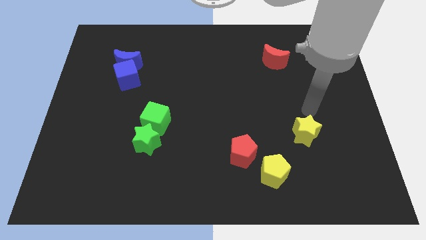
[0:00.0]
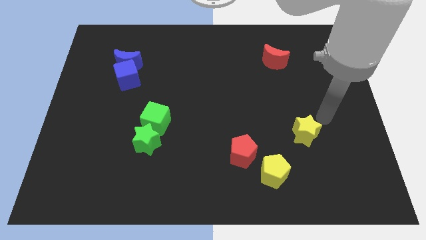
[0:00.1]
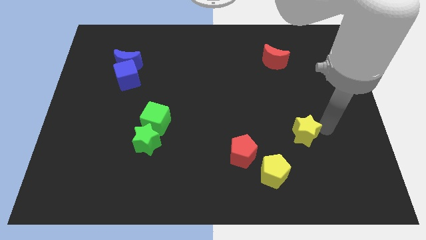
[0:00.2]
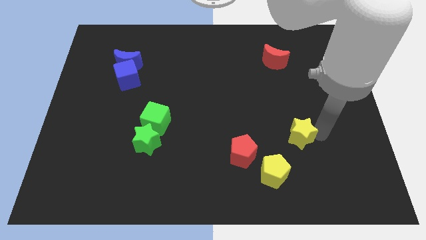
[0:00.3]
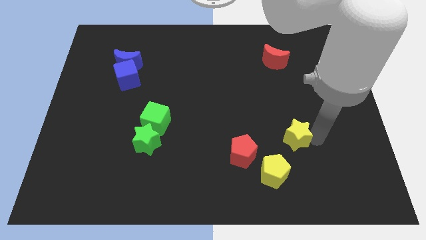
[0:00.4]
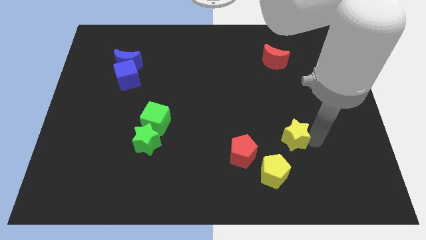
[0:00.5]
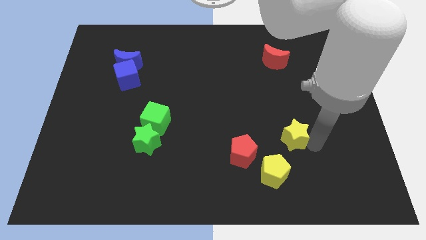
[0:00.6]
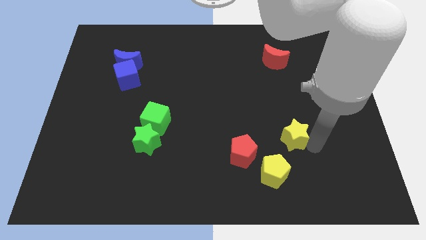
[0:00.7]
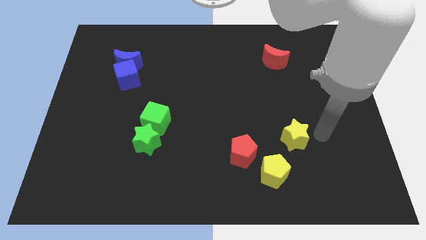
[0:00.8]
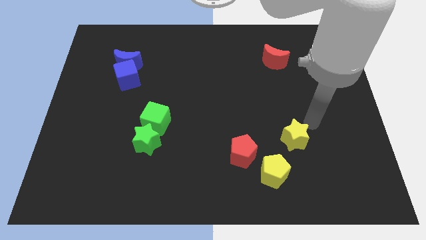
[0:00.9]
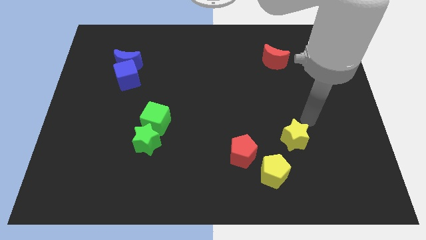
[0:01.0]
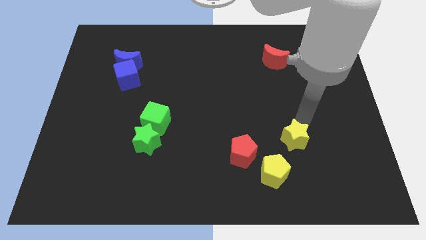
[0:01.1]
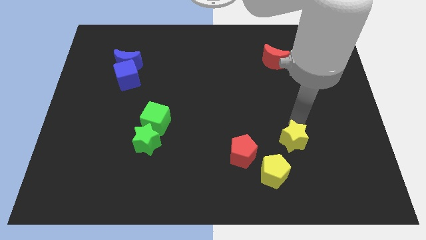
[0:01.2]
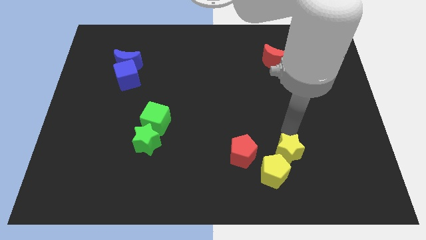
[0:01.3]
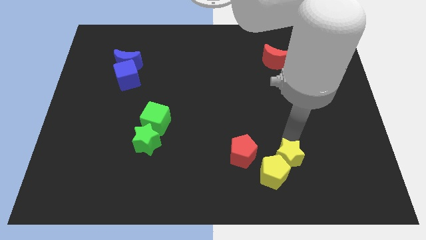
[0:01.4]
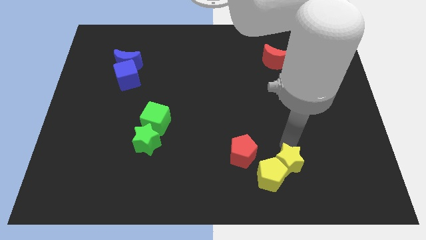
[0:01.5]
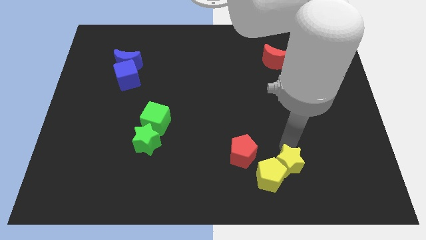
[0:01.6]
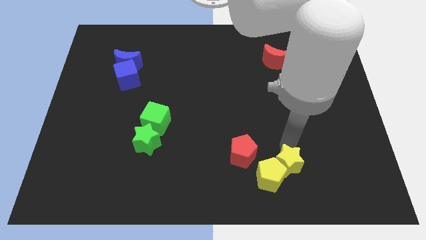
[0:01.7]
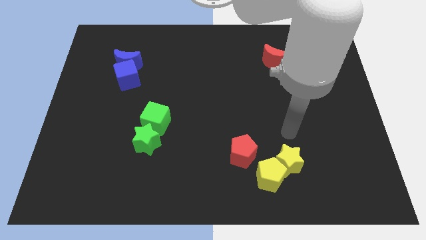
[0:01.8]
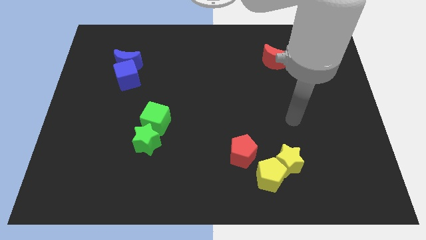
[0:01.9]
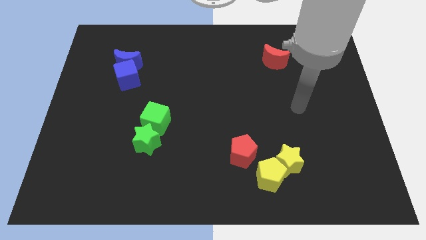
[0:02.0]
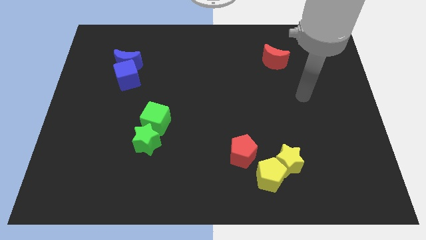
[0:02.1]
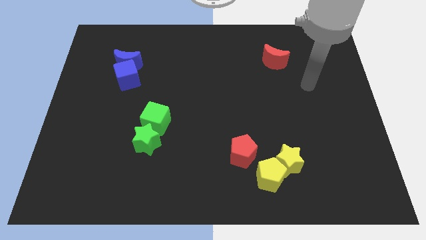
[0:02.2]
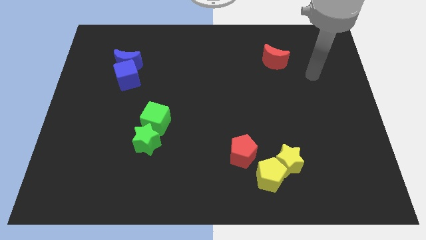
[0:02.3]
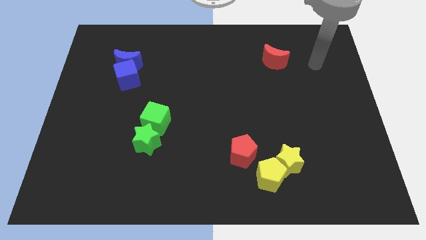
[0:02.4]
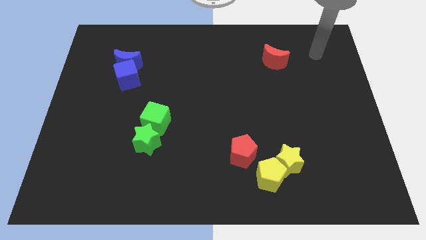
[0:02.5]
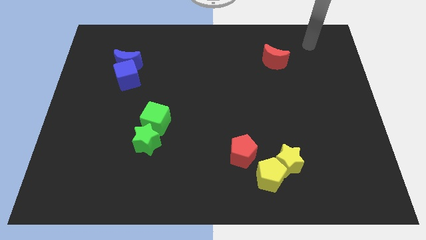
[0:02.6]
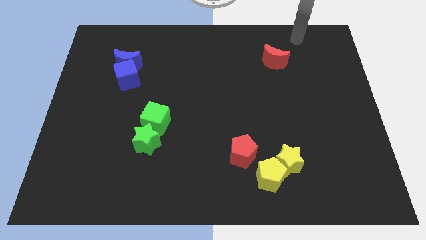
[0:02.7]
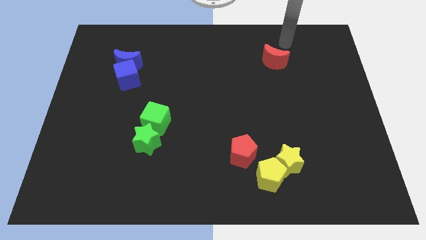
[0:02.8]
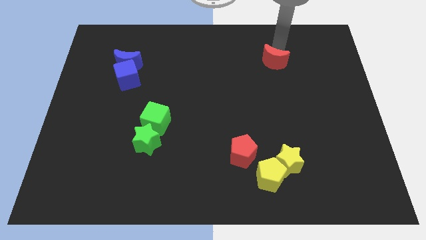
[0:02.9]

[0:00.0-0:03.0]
push the yellow star into the yellow pentagon

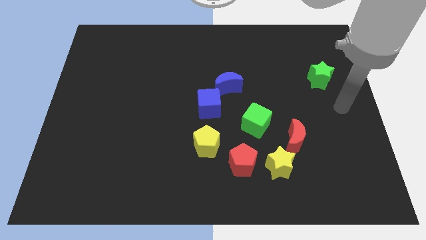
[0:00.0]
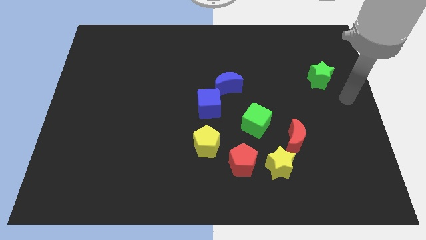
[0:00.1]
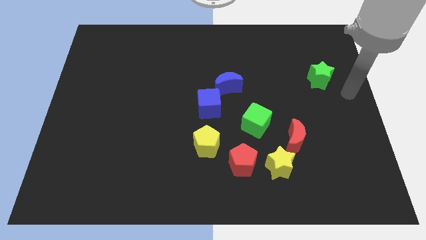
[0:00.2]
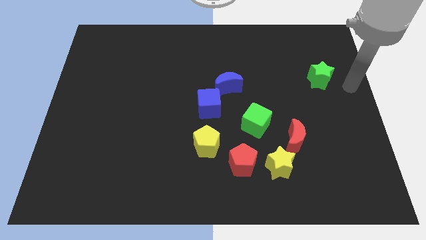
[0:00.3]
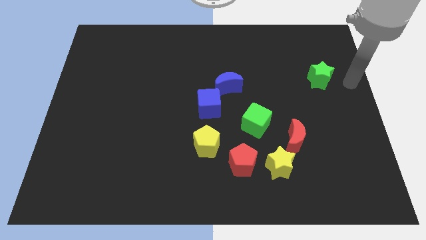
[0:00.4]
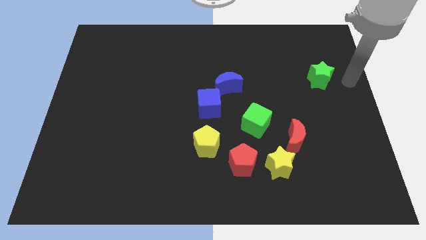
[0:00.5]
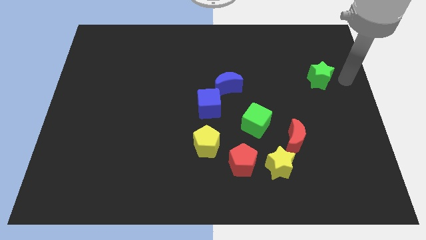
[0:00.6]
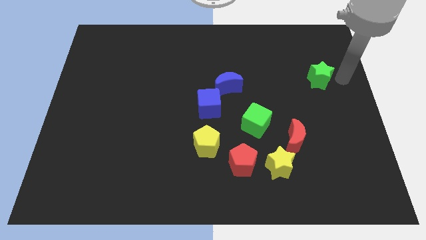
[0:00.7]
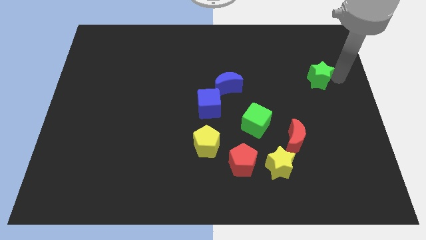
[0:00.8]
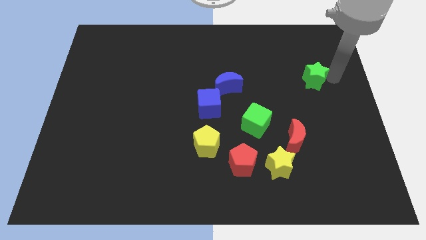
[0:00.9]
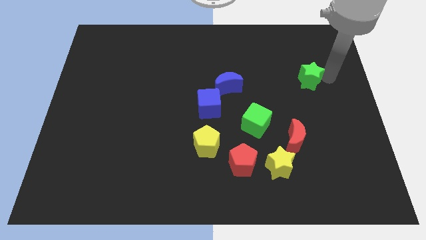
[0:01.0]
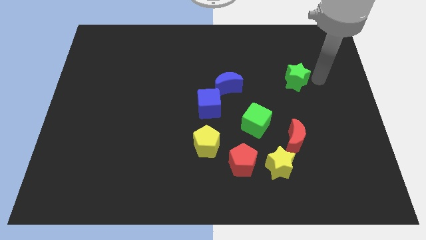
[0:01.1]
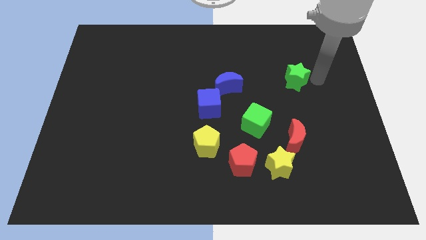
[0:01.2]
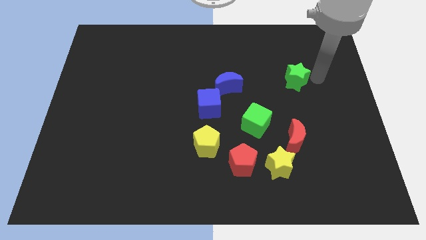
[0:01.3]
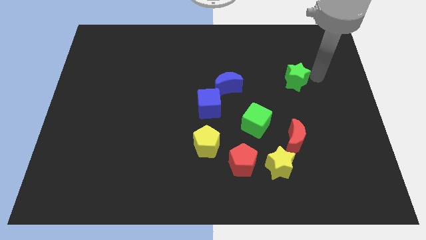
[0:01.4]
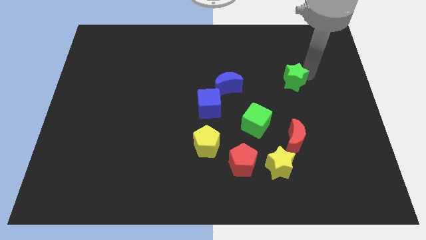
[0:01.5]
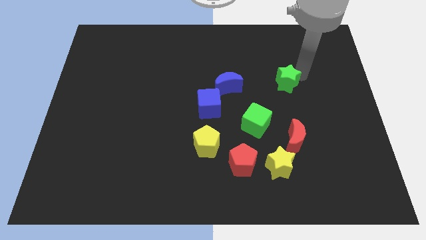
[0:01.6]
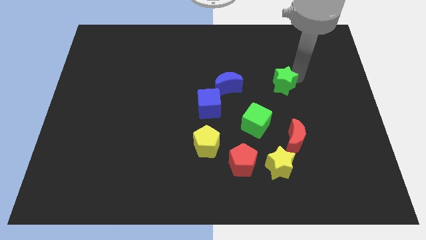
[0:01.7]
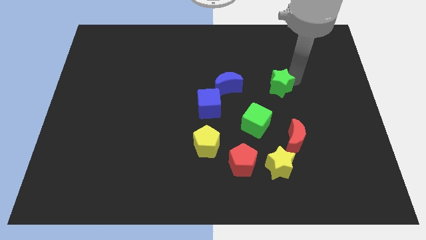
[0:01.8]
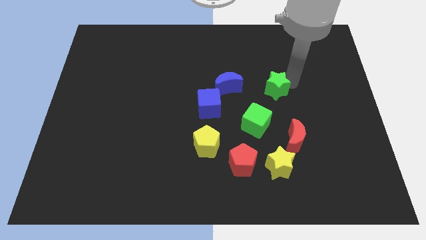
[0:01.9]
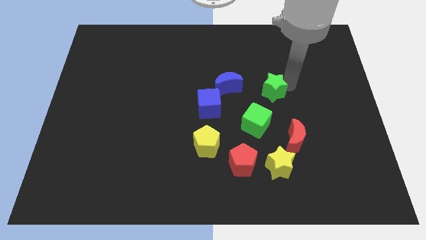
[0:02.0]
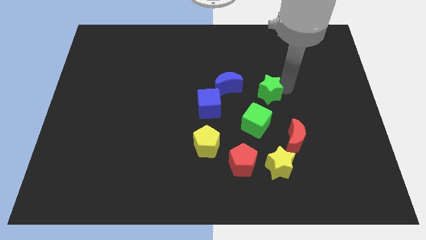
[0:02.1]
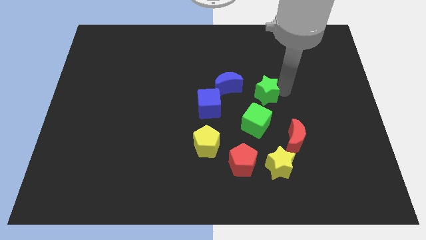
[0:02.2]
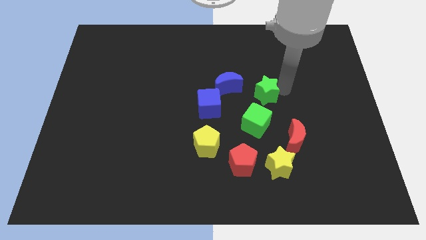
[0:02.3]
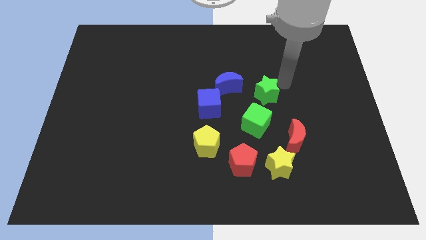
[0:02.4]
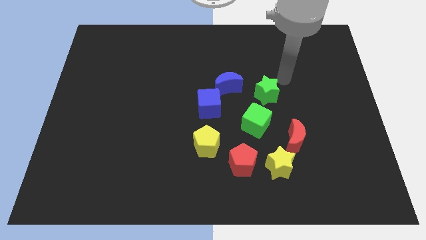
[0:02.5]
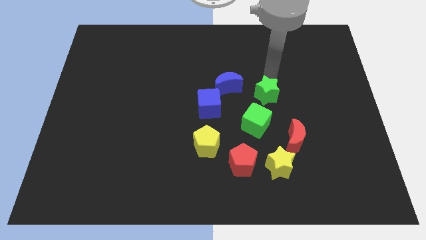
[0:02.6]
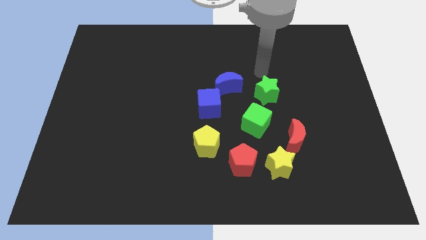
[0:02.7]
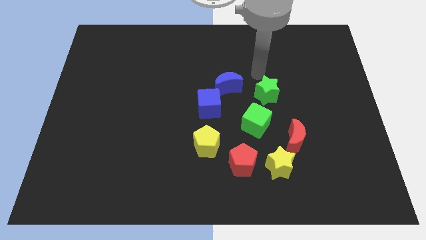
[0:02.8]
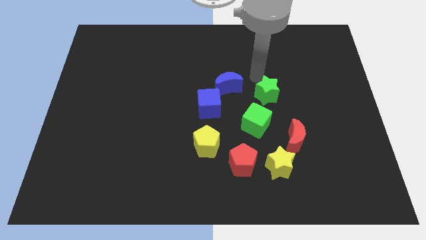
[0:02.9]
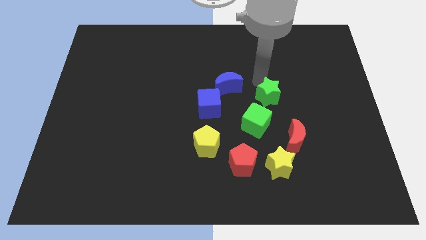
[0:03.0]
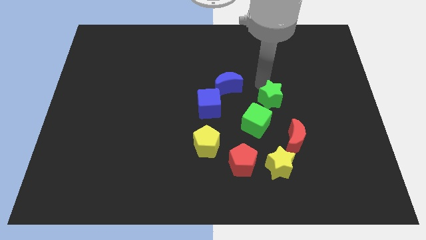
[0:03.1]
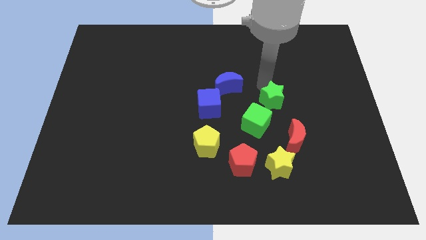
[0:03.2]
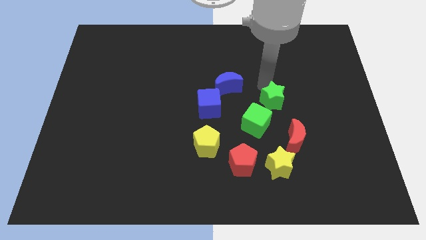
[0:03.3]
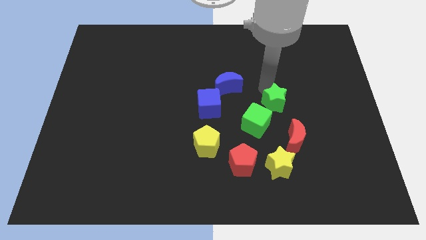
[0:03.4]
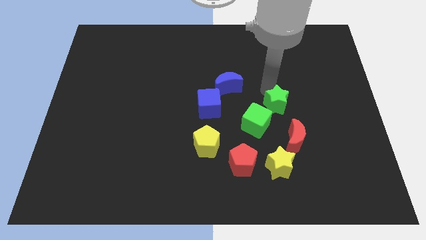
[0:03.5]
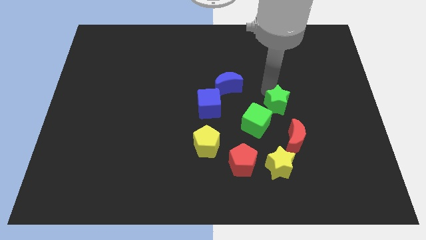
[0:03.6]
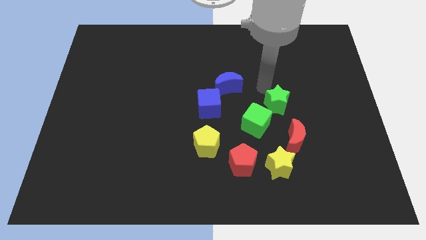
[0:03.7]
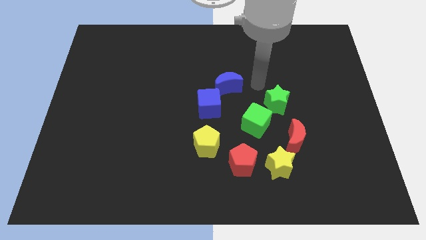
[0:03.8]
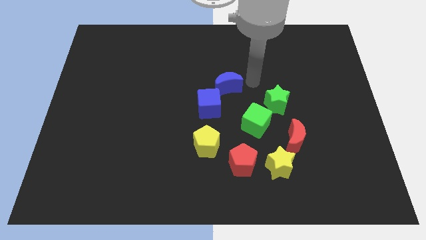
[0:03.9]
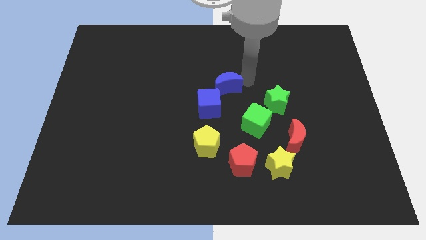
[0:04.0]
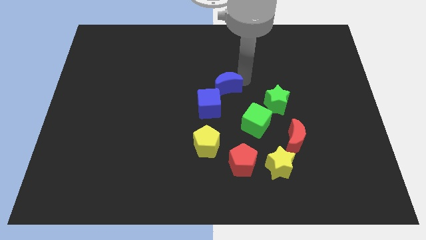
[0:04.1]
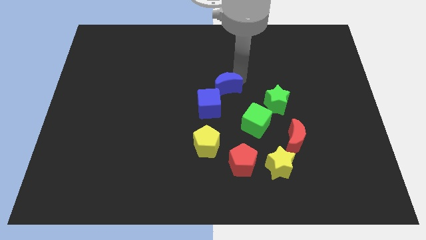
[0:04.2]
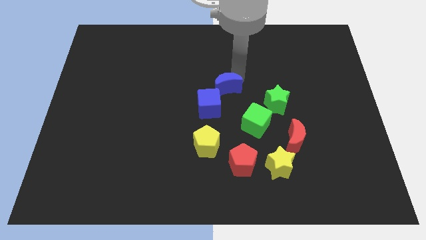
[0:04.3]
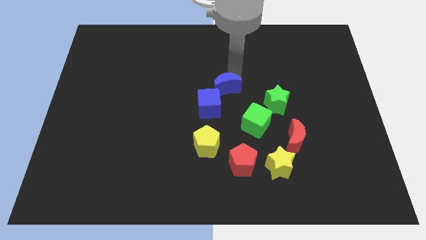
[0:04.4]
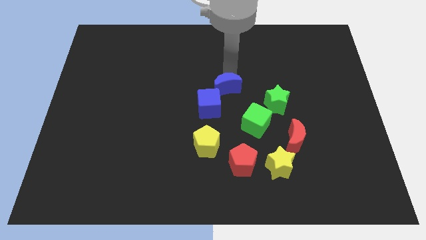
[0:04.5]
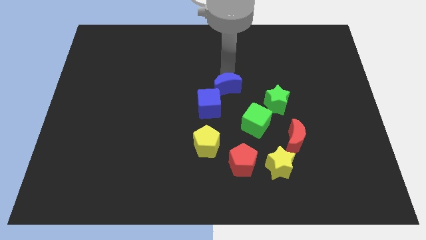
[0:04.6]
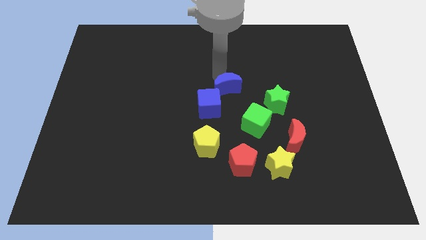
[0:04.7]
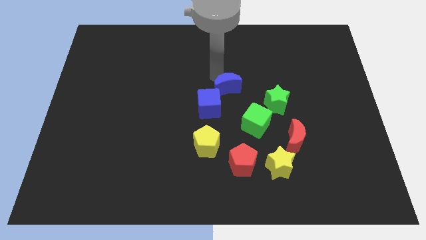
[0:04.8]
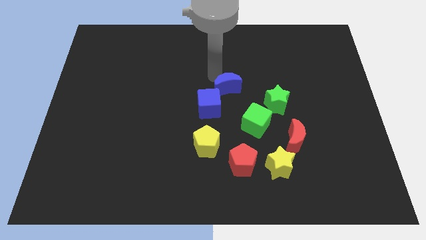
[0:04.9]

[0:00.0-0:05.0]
place the green star in diagonal position to the green cube

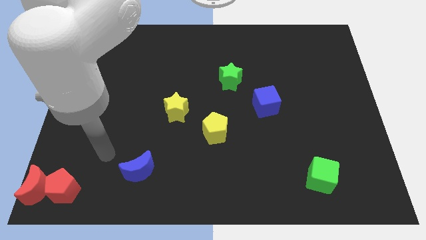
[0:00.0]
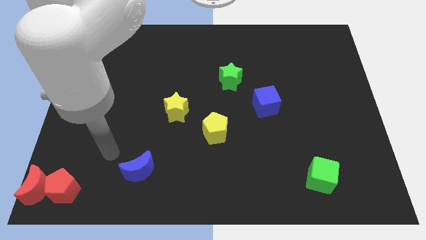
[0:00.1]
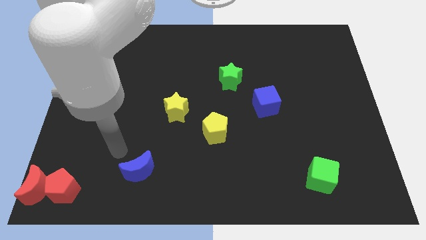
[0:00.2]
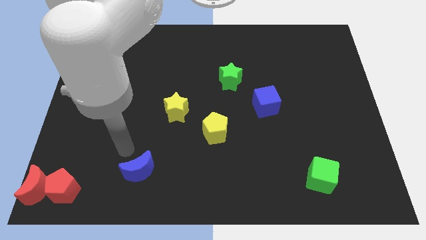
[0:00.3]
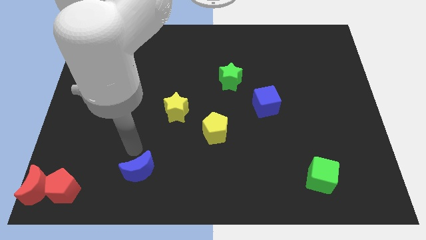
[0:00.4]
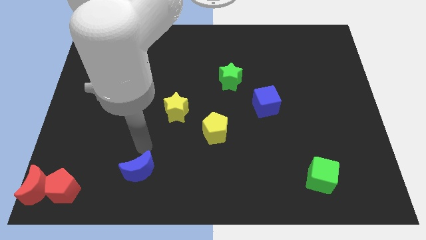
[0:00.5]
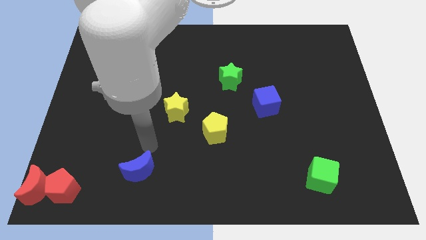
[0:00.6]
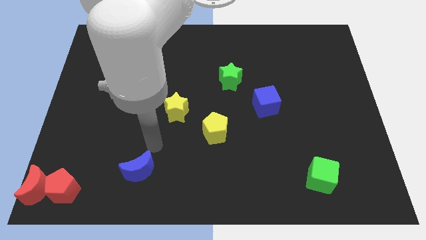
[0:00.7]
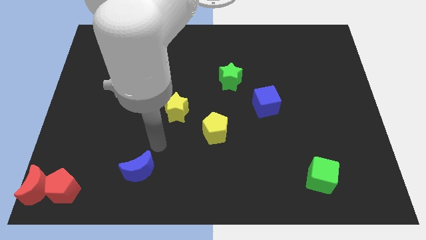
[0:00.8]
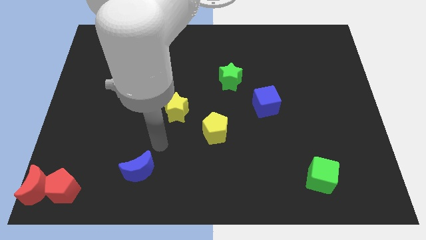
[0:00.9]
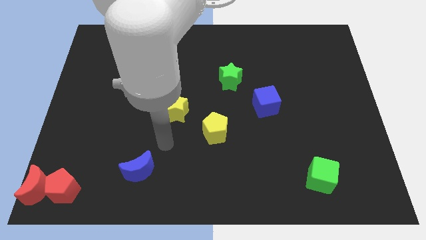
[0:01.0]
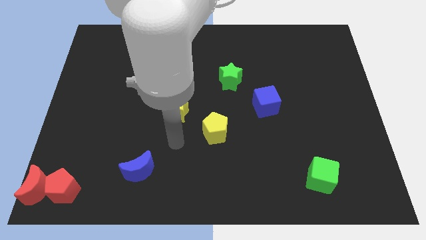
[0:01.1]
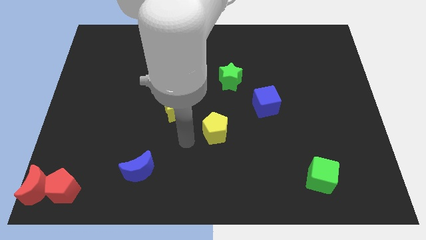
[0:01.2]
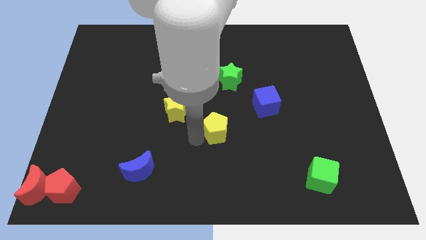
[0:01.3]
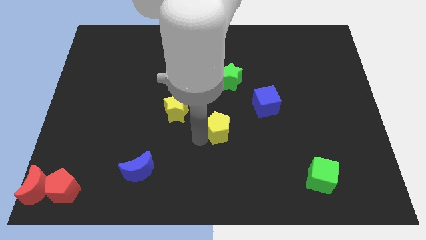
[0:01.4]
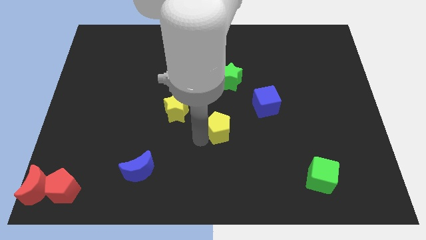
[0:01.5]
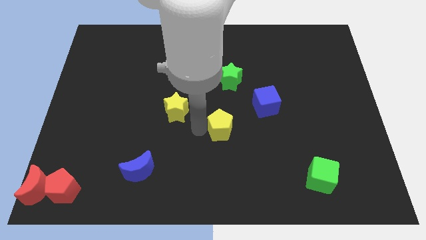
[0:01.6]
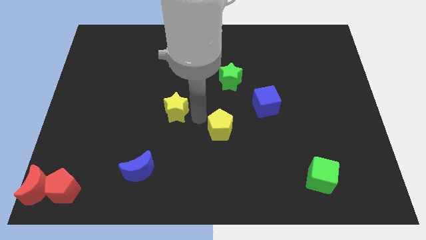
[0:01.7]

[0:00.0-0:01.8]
push the yellow pentagon slightly to the top side of the board
